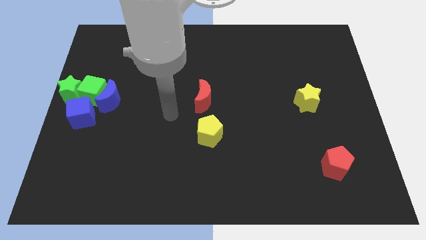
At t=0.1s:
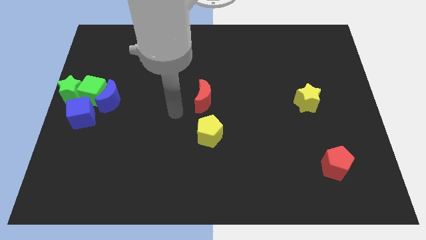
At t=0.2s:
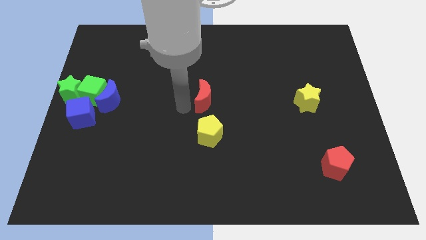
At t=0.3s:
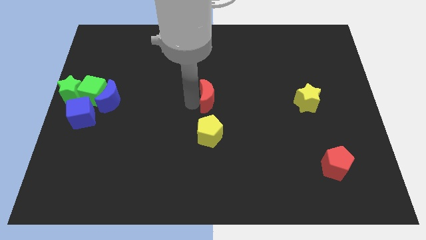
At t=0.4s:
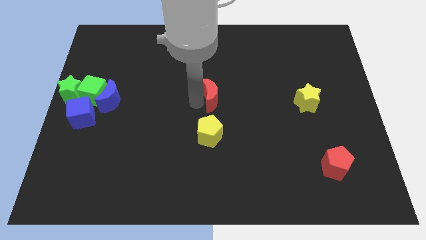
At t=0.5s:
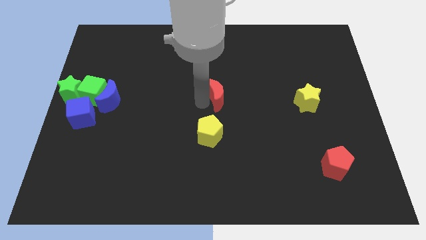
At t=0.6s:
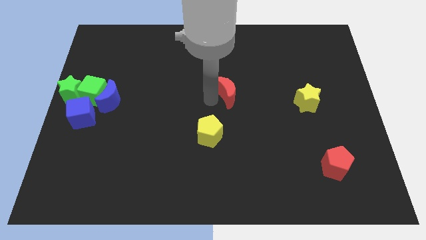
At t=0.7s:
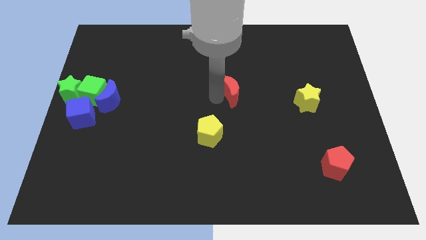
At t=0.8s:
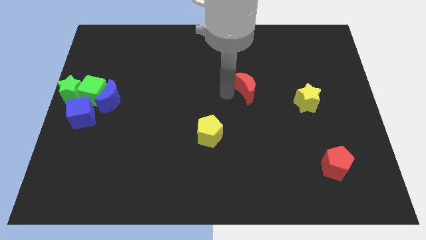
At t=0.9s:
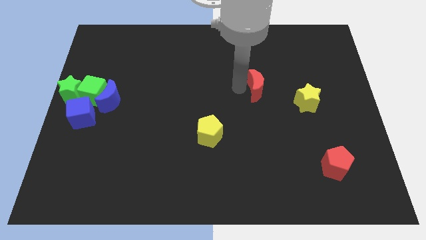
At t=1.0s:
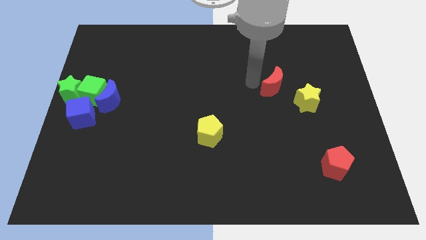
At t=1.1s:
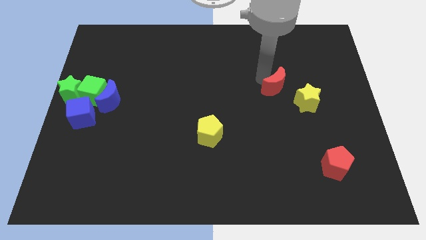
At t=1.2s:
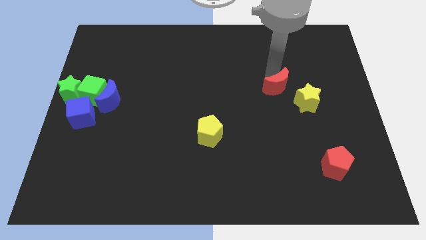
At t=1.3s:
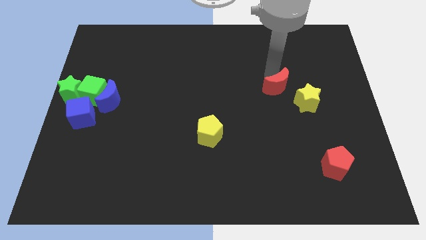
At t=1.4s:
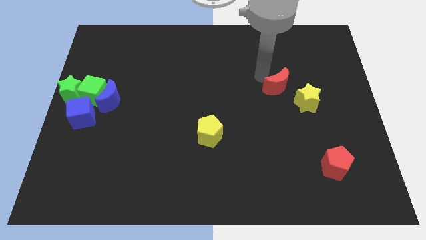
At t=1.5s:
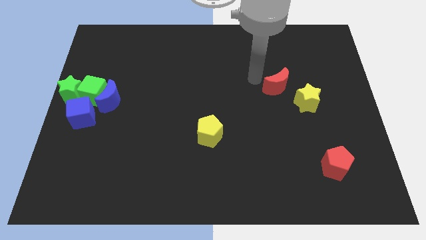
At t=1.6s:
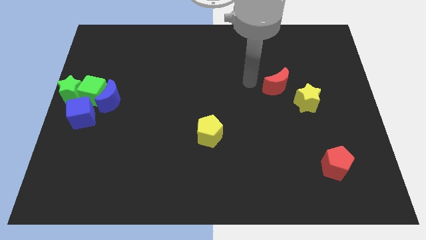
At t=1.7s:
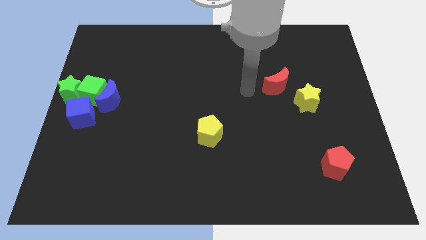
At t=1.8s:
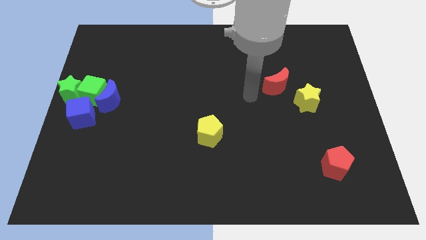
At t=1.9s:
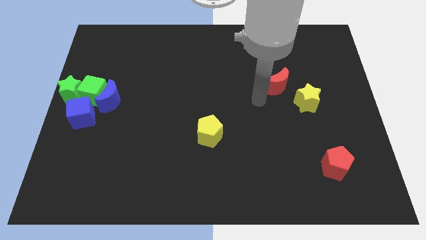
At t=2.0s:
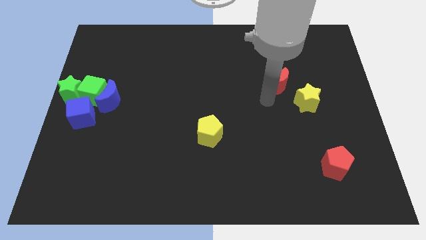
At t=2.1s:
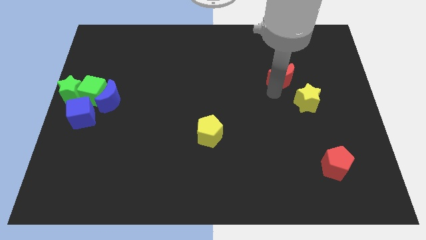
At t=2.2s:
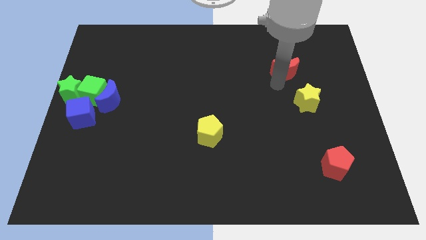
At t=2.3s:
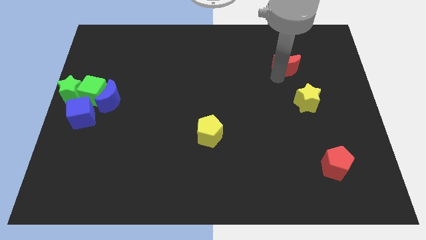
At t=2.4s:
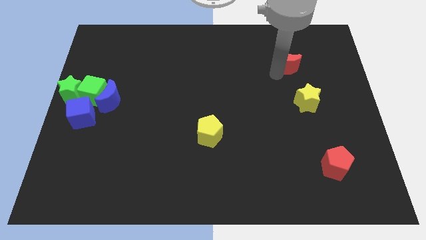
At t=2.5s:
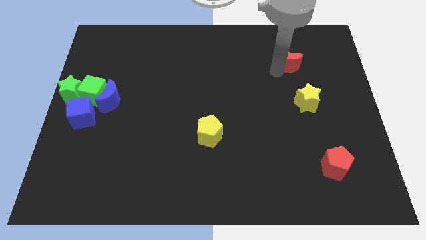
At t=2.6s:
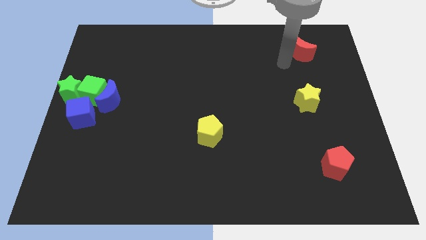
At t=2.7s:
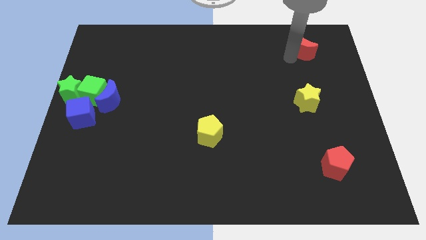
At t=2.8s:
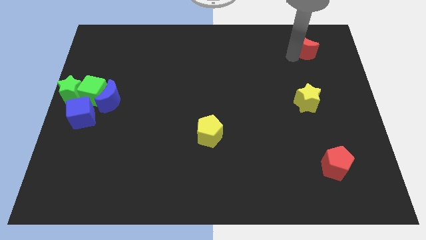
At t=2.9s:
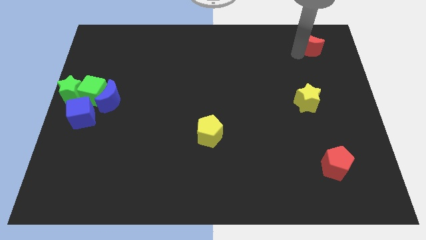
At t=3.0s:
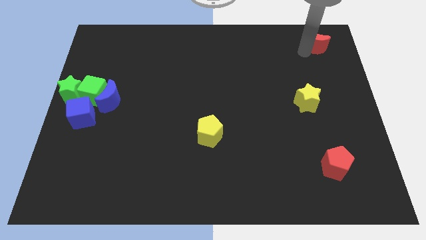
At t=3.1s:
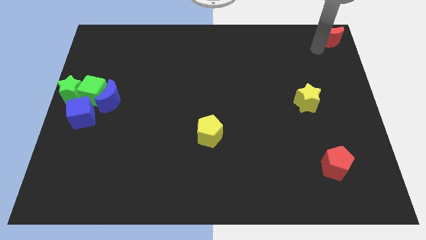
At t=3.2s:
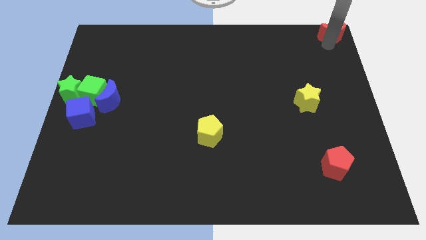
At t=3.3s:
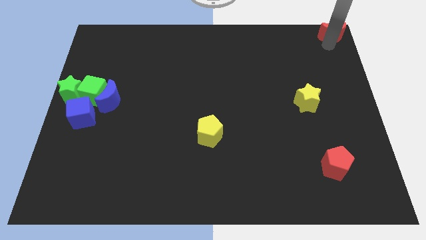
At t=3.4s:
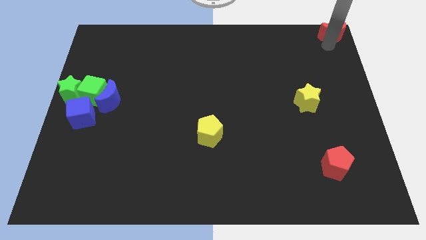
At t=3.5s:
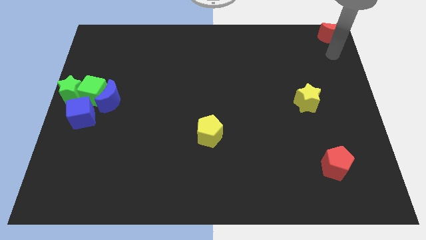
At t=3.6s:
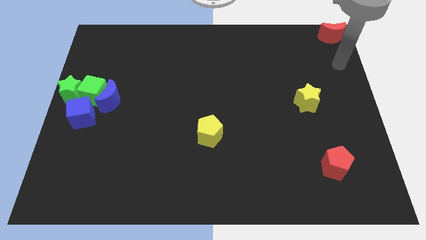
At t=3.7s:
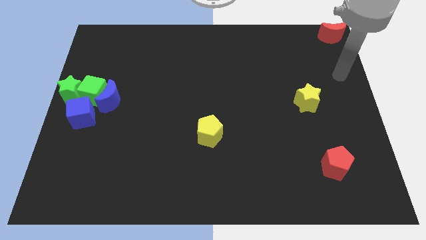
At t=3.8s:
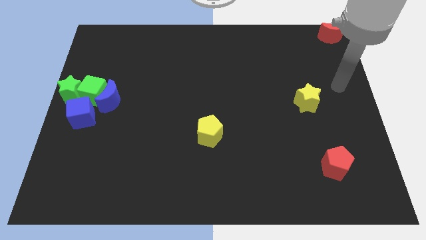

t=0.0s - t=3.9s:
place red crescent on top right corner of the board

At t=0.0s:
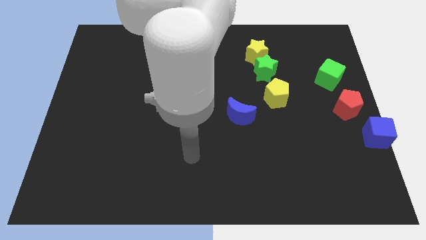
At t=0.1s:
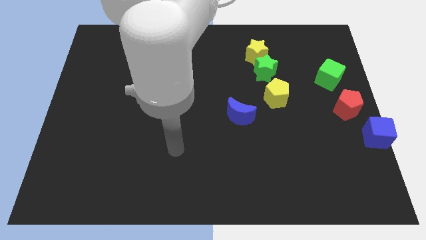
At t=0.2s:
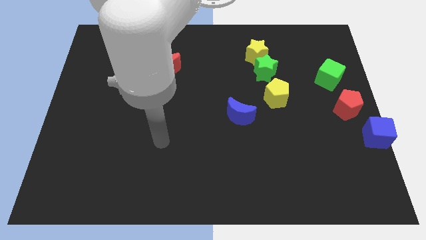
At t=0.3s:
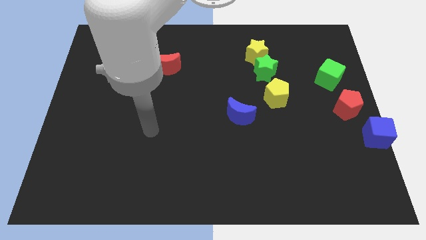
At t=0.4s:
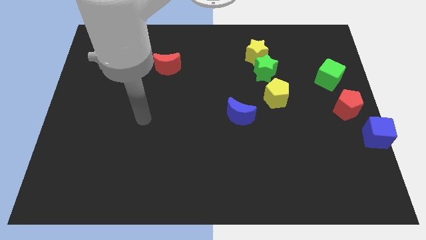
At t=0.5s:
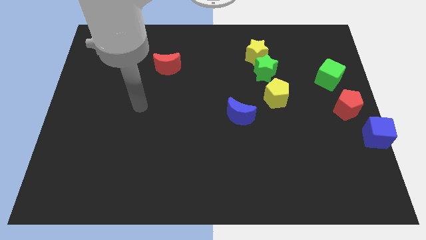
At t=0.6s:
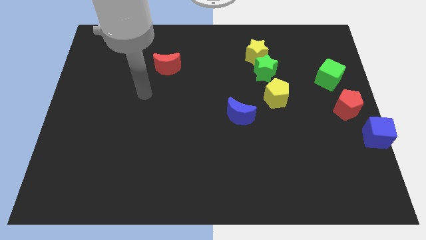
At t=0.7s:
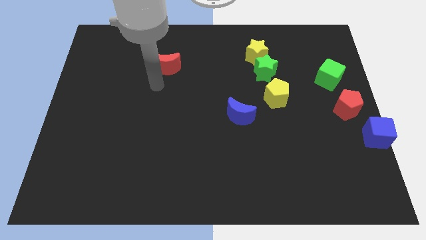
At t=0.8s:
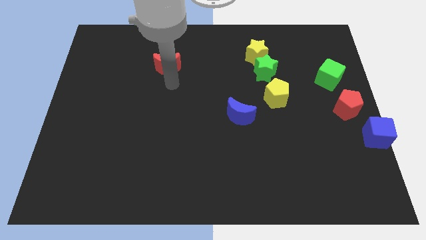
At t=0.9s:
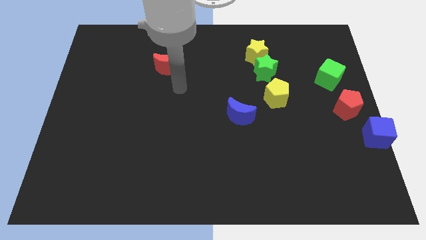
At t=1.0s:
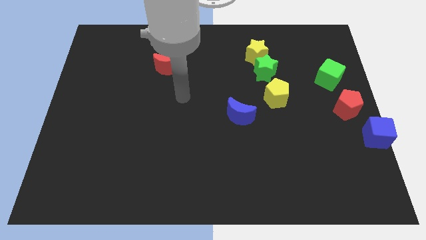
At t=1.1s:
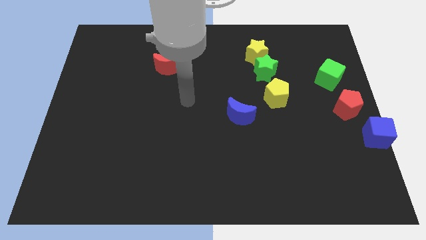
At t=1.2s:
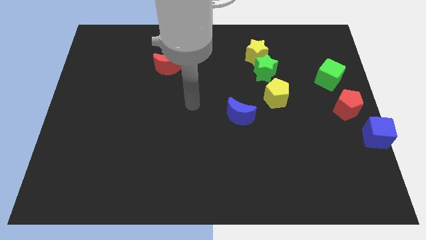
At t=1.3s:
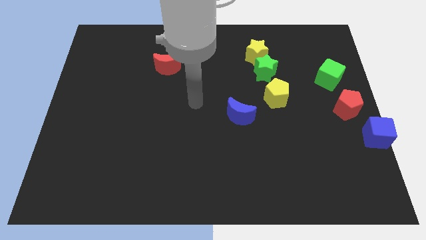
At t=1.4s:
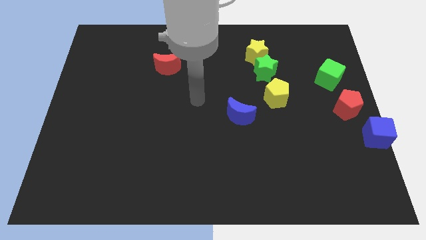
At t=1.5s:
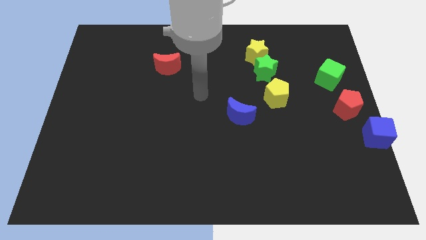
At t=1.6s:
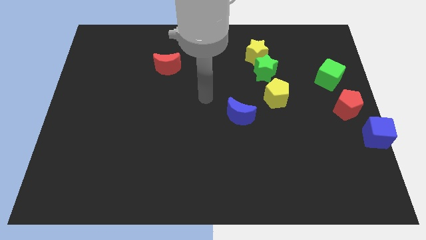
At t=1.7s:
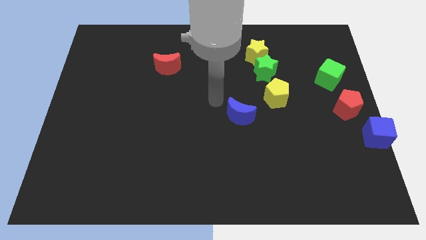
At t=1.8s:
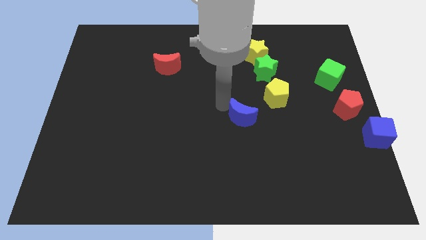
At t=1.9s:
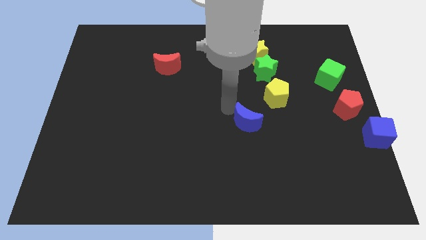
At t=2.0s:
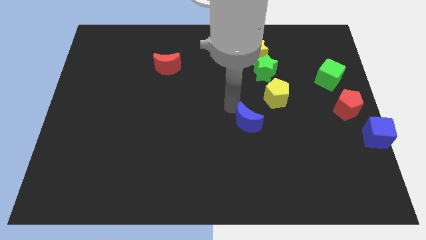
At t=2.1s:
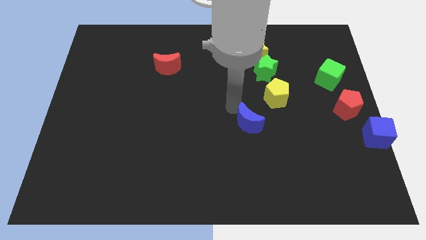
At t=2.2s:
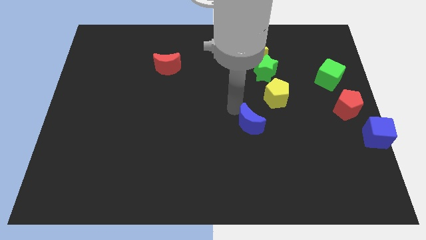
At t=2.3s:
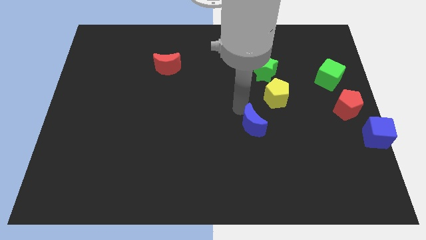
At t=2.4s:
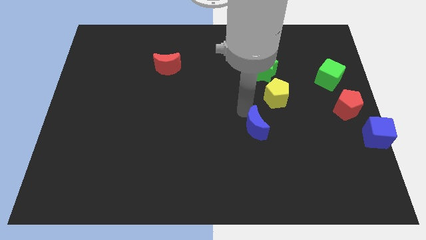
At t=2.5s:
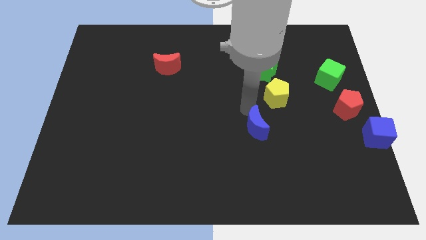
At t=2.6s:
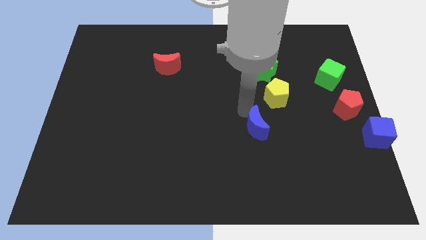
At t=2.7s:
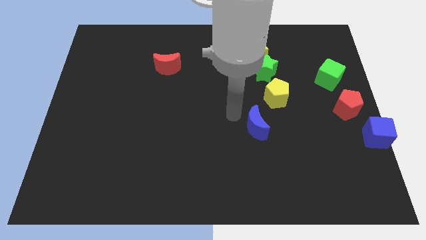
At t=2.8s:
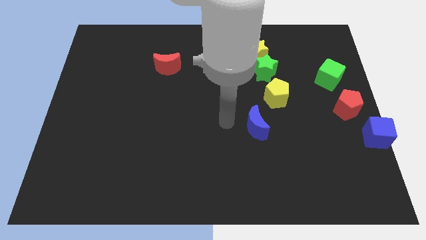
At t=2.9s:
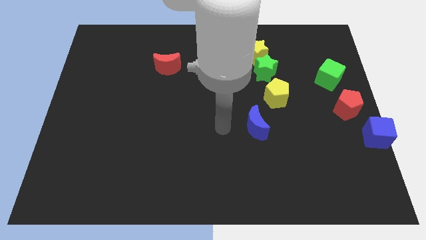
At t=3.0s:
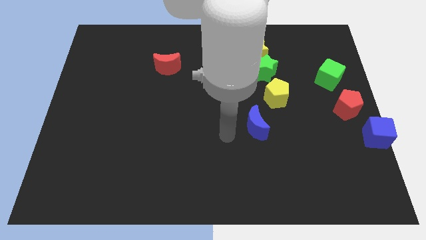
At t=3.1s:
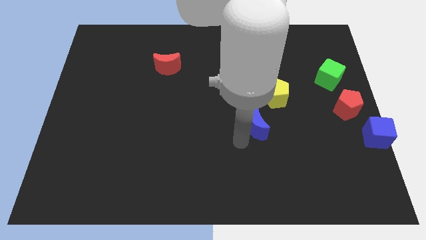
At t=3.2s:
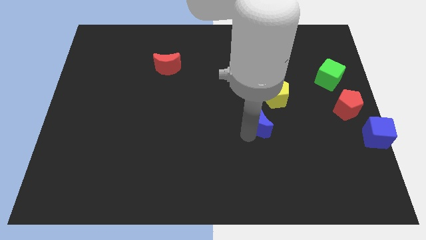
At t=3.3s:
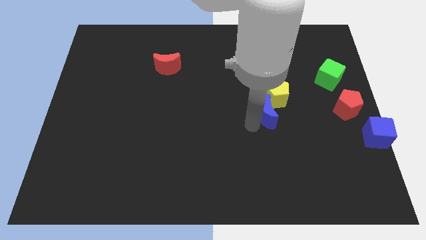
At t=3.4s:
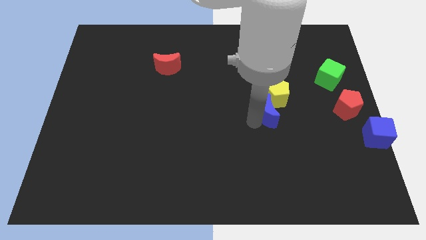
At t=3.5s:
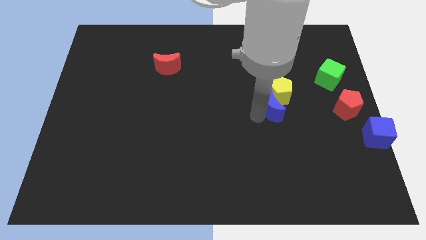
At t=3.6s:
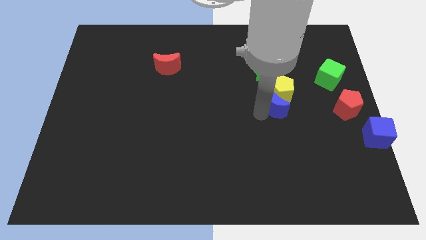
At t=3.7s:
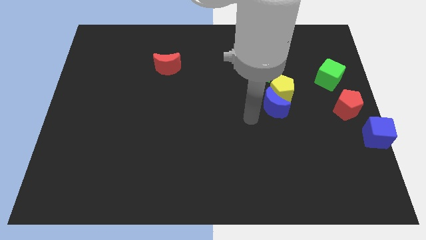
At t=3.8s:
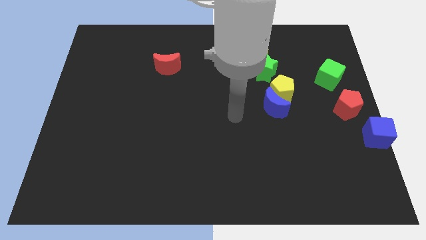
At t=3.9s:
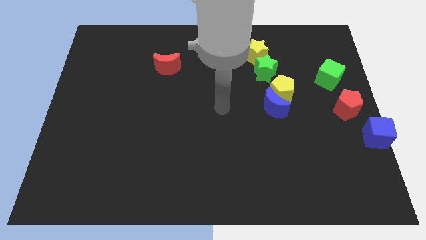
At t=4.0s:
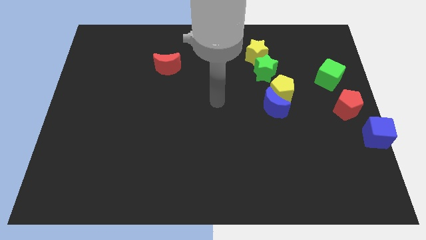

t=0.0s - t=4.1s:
push the blue crescent into the yellow pentagon

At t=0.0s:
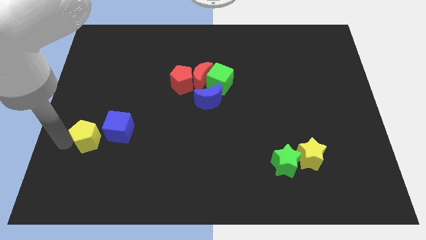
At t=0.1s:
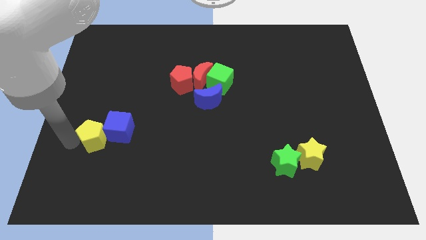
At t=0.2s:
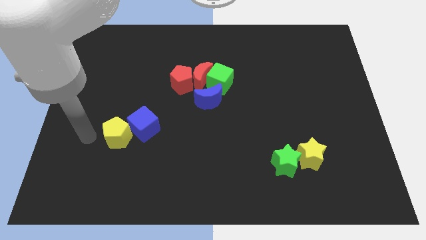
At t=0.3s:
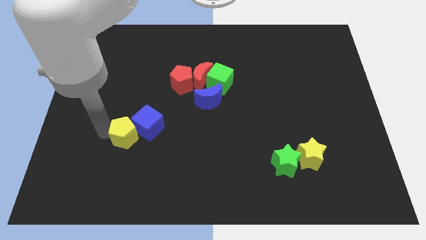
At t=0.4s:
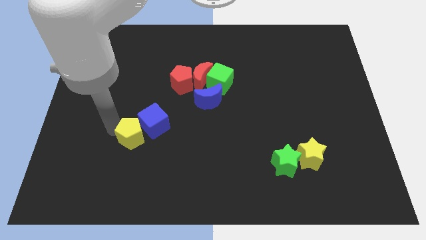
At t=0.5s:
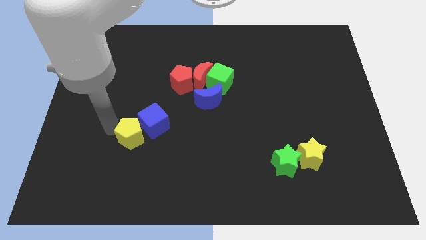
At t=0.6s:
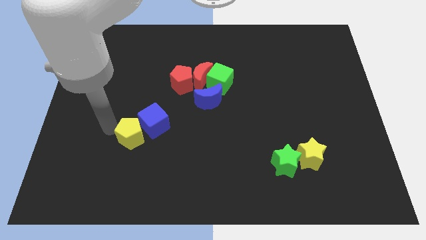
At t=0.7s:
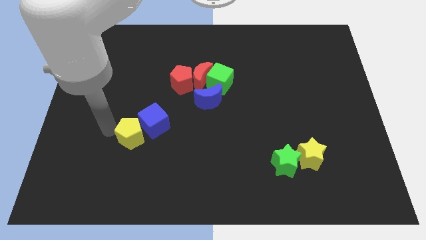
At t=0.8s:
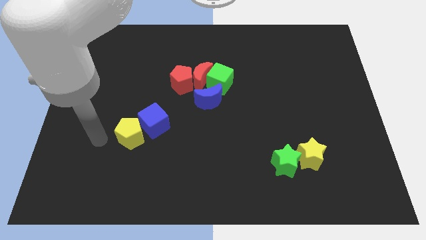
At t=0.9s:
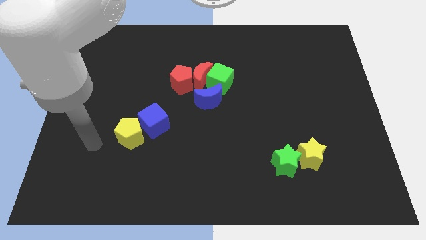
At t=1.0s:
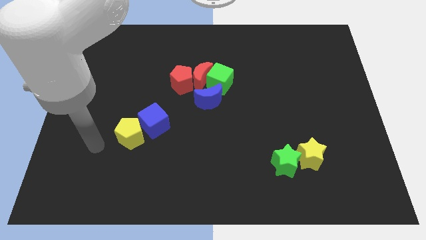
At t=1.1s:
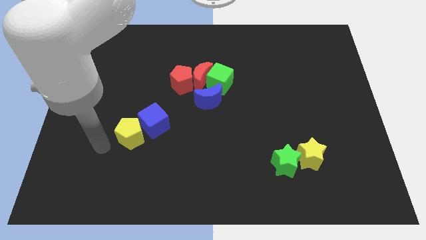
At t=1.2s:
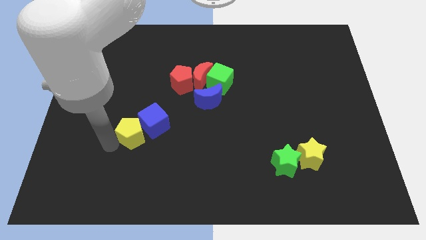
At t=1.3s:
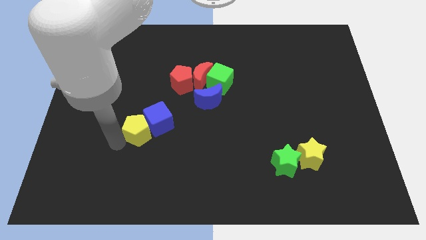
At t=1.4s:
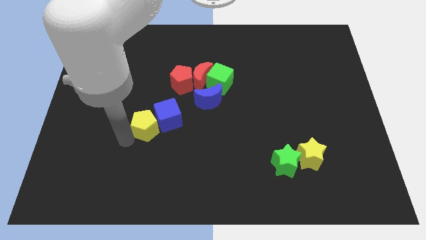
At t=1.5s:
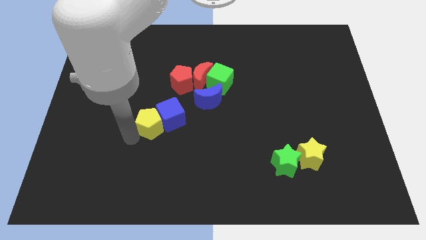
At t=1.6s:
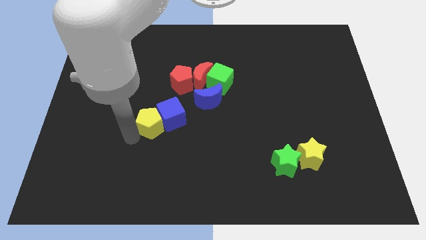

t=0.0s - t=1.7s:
push the yellow pentagon and blue cube diagonally left of the blue moon
